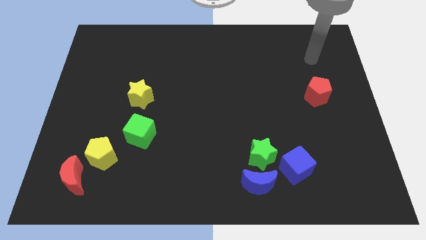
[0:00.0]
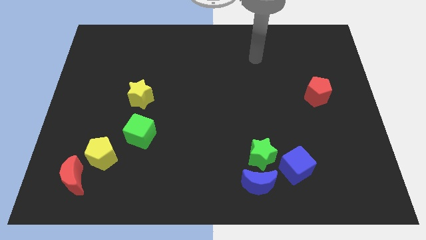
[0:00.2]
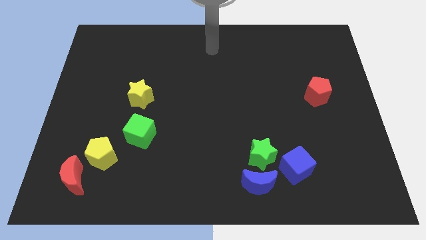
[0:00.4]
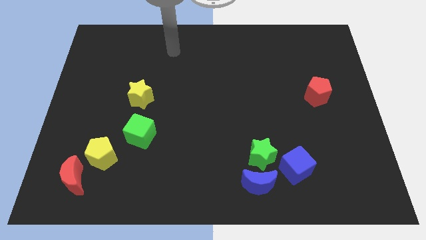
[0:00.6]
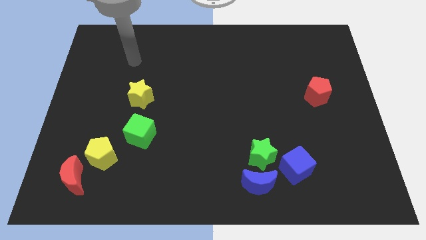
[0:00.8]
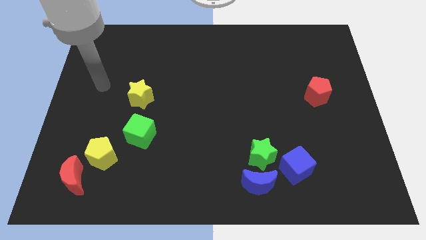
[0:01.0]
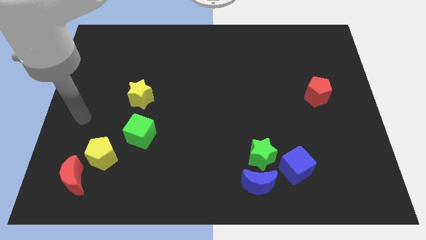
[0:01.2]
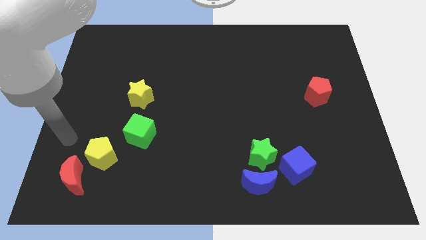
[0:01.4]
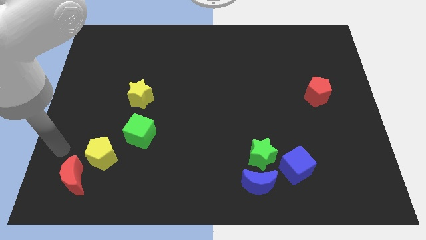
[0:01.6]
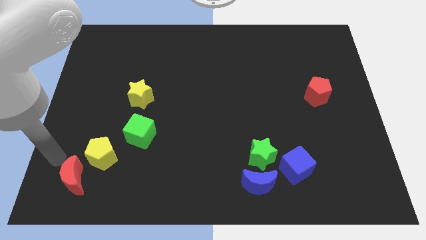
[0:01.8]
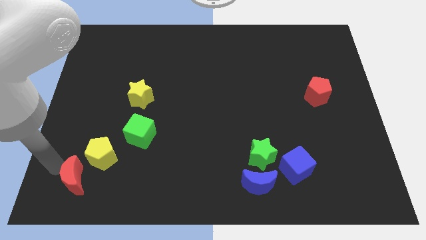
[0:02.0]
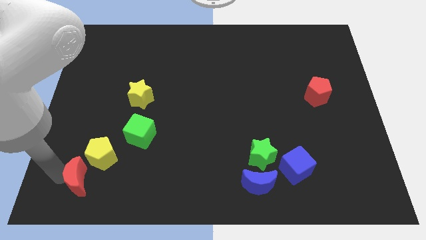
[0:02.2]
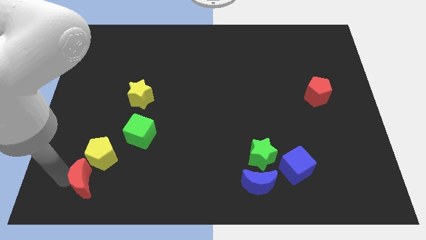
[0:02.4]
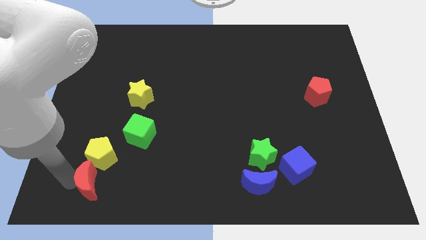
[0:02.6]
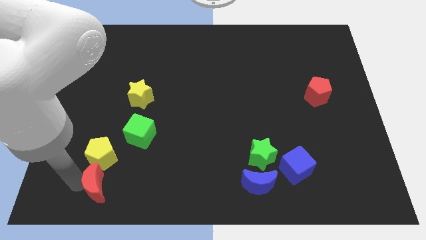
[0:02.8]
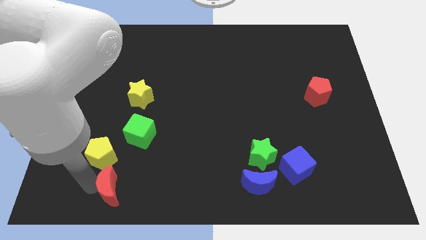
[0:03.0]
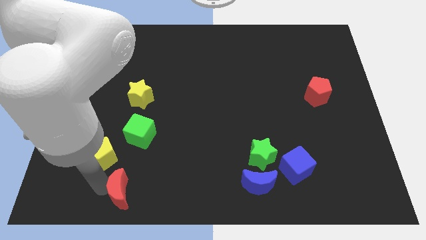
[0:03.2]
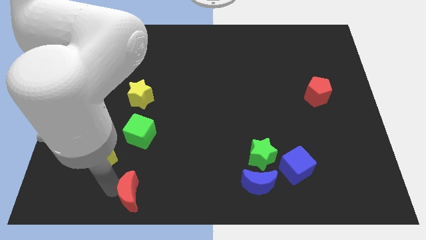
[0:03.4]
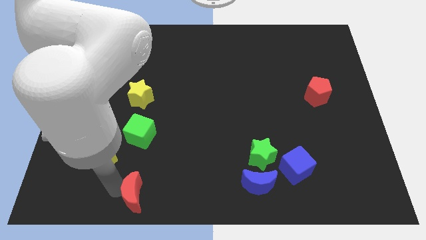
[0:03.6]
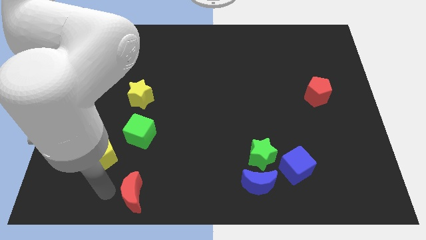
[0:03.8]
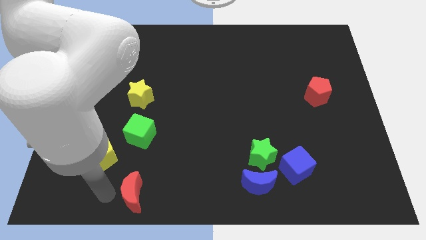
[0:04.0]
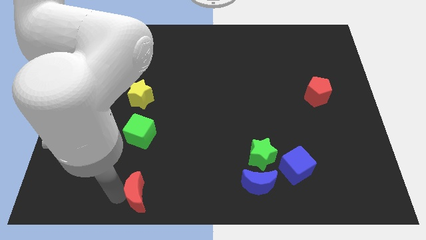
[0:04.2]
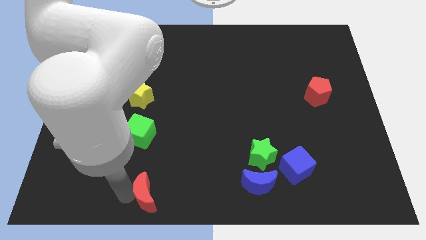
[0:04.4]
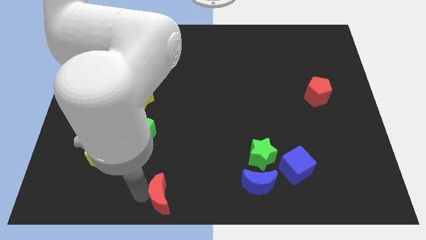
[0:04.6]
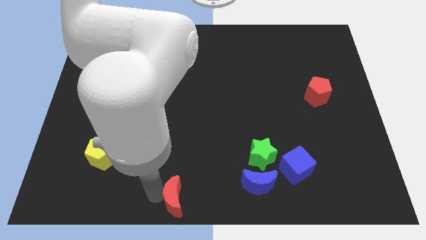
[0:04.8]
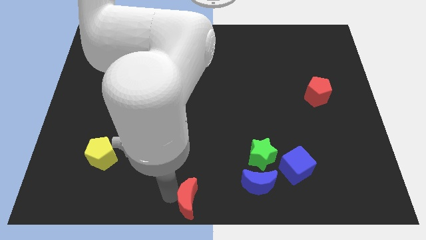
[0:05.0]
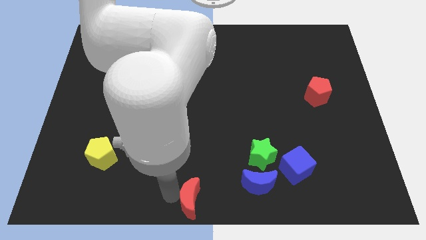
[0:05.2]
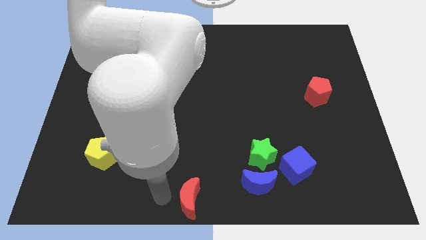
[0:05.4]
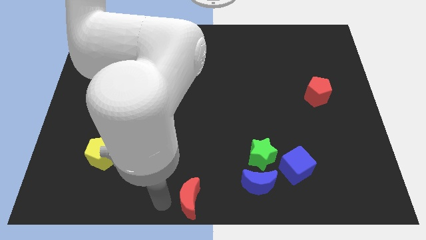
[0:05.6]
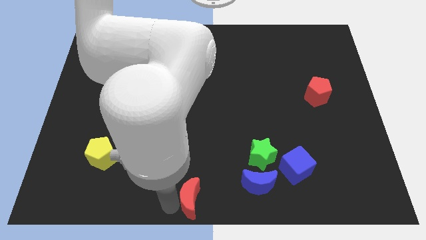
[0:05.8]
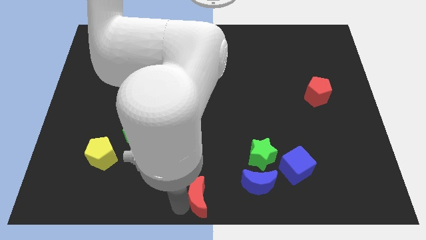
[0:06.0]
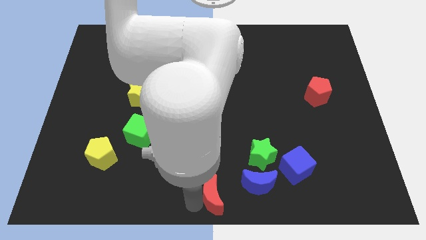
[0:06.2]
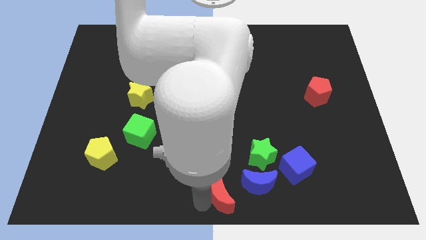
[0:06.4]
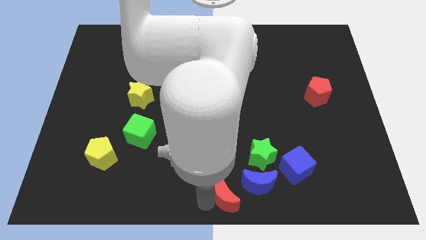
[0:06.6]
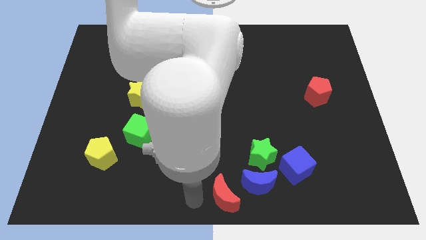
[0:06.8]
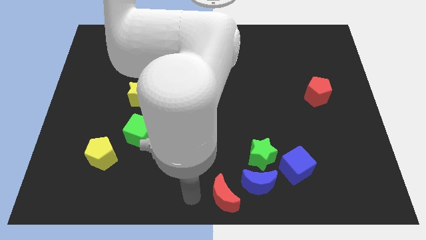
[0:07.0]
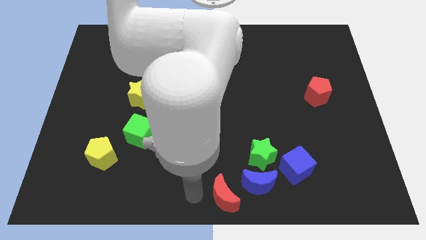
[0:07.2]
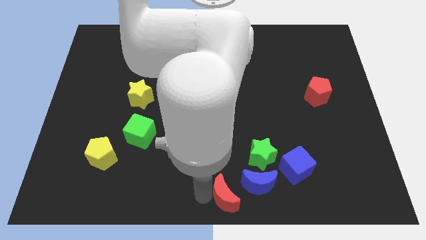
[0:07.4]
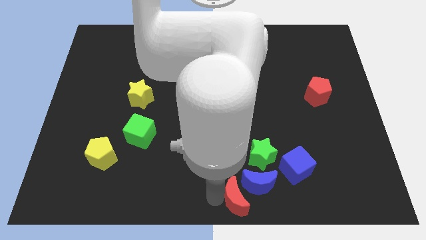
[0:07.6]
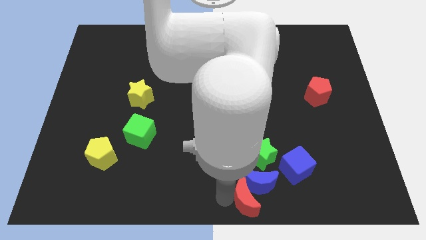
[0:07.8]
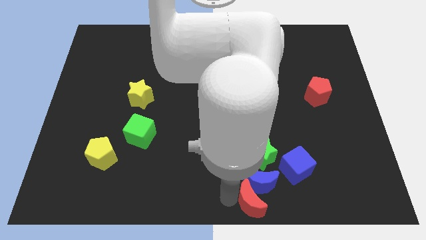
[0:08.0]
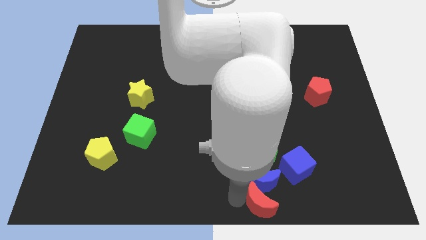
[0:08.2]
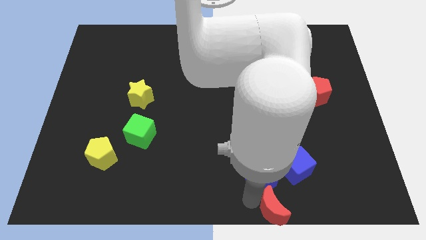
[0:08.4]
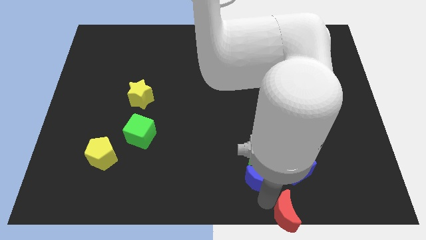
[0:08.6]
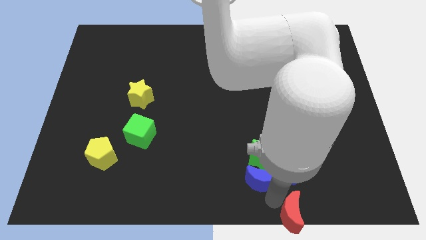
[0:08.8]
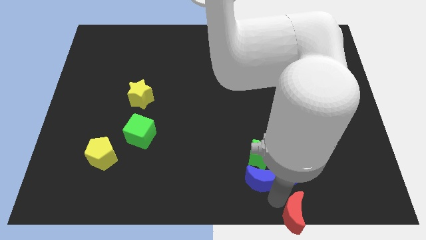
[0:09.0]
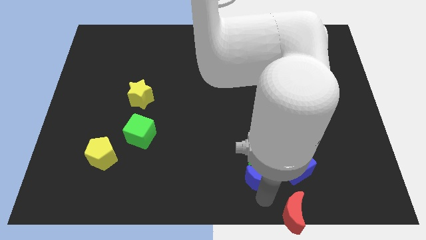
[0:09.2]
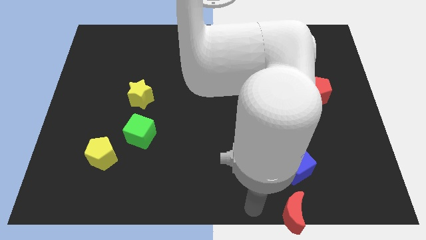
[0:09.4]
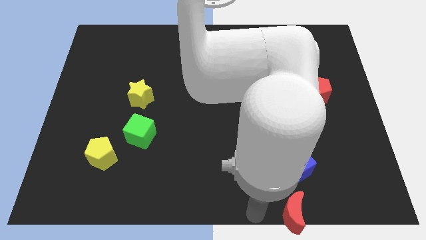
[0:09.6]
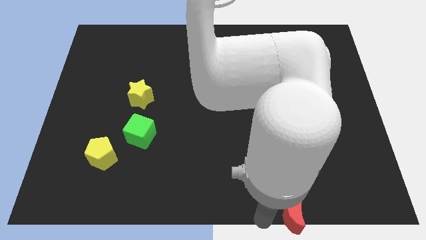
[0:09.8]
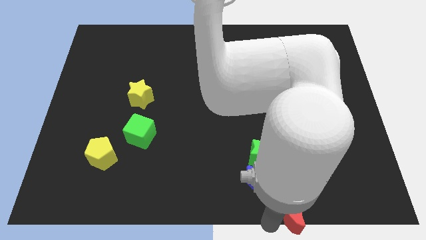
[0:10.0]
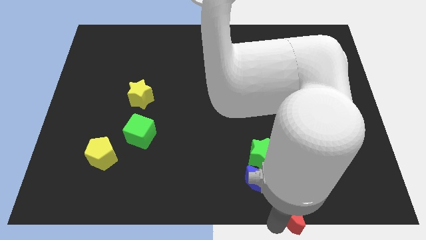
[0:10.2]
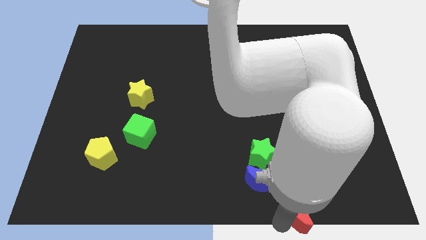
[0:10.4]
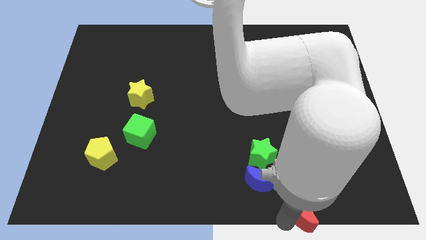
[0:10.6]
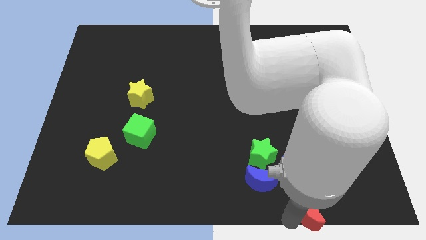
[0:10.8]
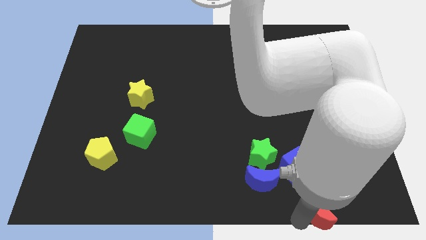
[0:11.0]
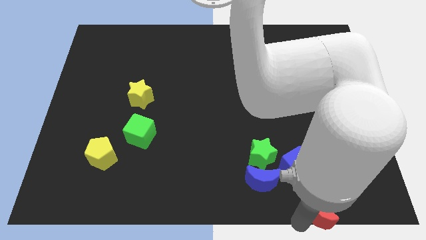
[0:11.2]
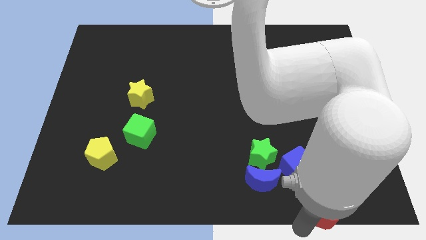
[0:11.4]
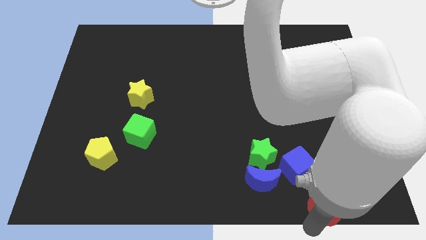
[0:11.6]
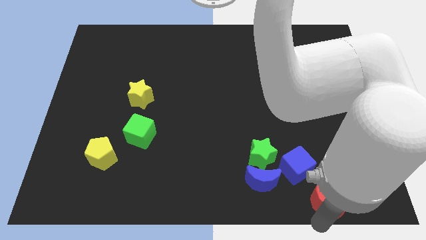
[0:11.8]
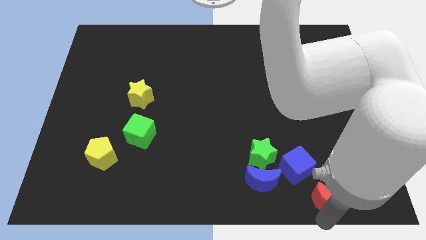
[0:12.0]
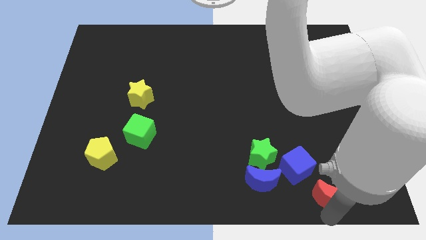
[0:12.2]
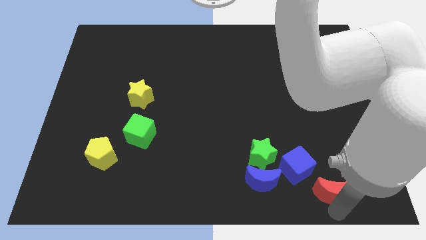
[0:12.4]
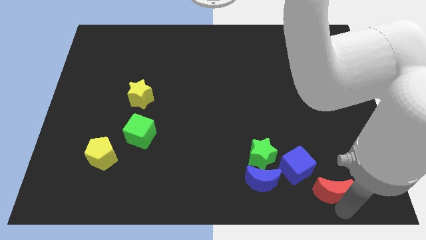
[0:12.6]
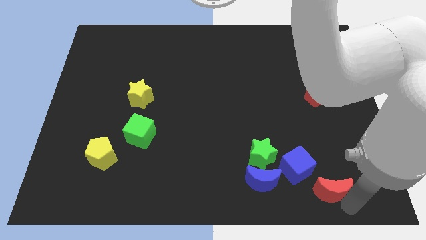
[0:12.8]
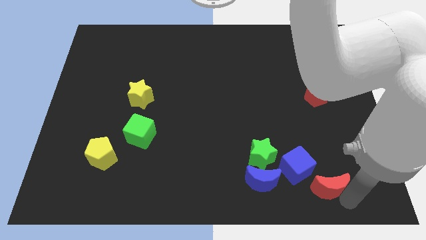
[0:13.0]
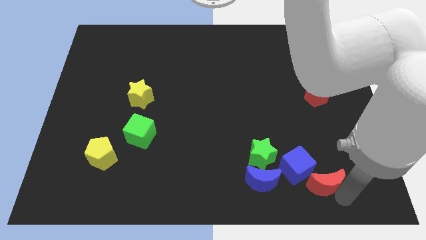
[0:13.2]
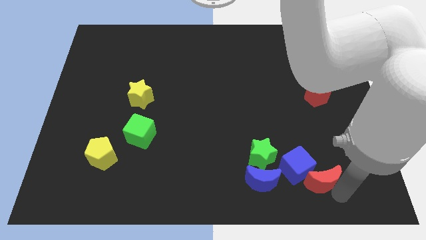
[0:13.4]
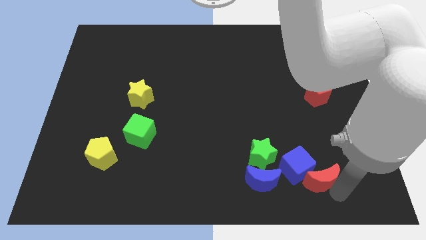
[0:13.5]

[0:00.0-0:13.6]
slide the red moon close to the blue cube

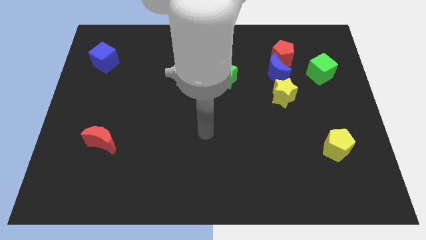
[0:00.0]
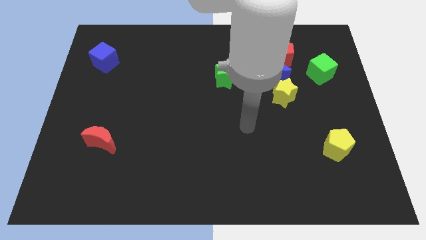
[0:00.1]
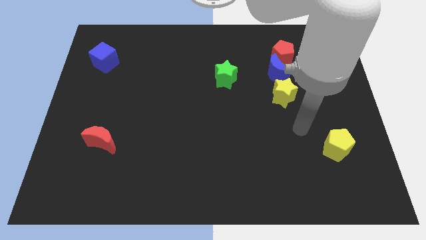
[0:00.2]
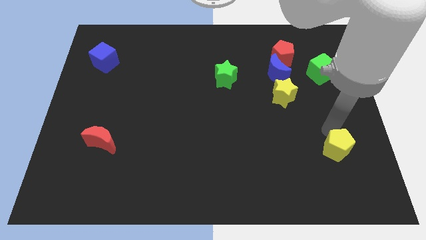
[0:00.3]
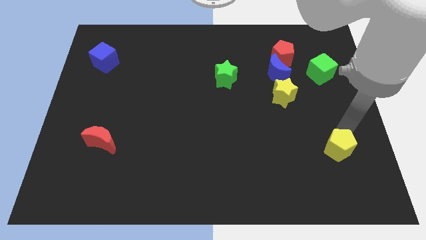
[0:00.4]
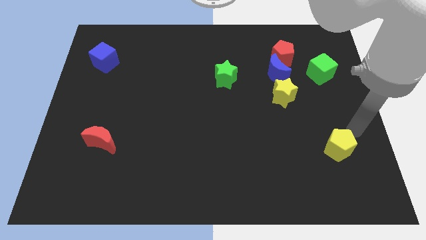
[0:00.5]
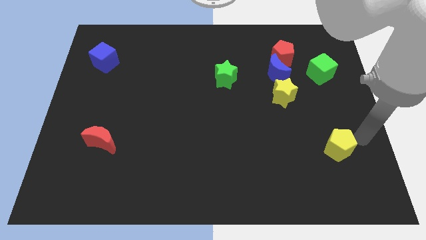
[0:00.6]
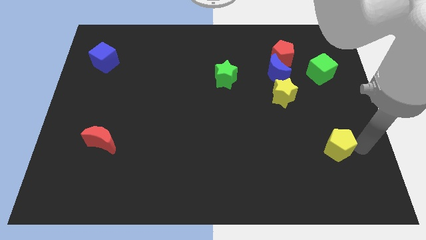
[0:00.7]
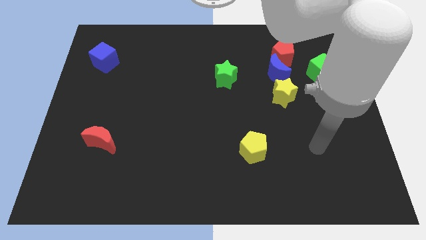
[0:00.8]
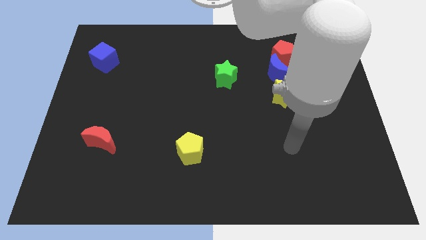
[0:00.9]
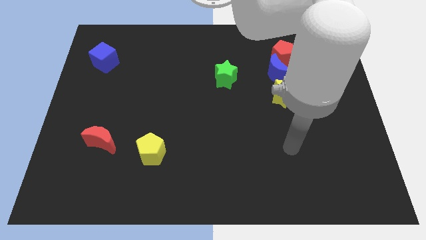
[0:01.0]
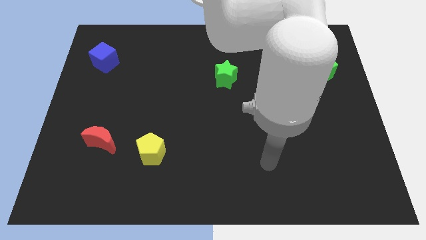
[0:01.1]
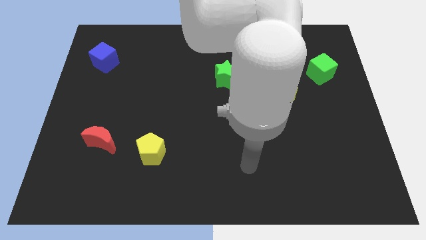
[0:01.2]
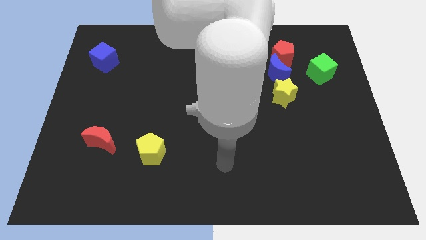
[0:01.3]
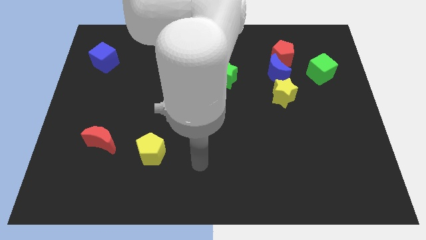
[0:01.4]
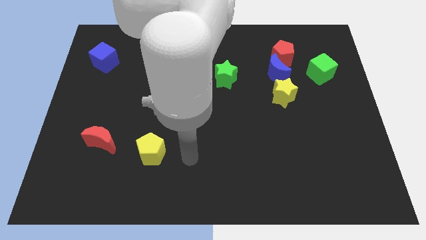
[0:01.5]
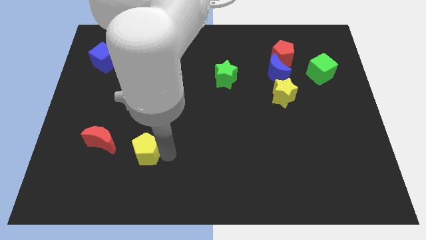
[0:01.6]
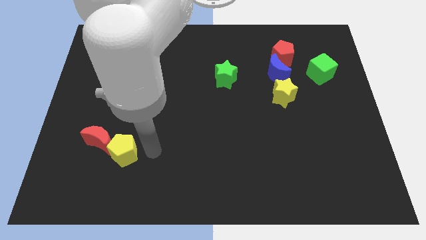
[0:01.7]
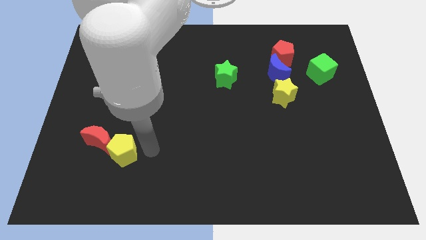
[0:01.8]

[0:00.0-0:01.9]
slide the yellow pentagon next to the red moon
